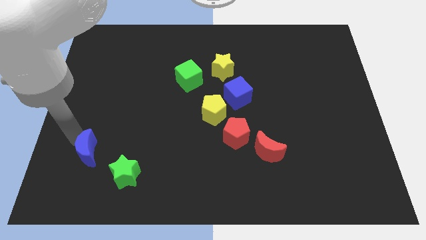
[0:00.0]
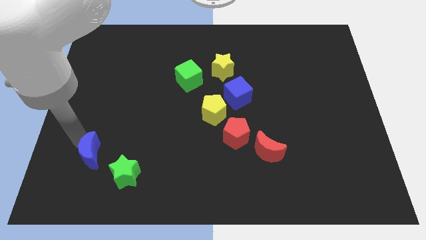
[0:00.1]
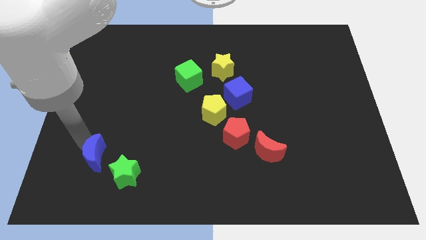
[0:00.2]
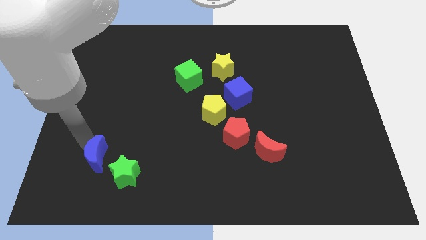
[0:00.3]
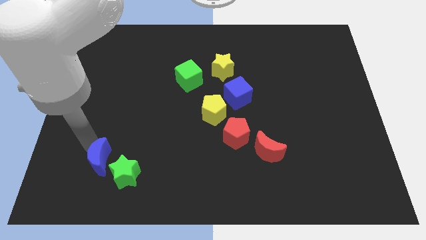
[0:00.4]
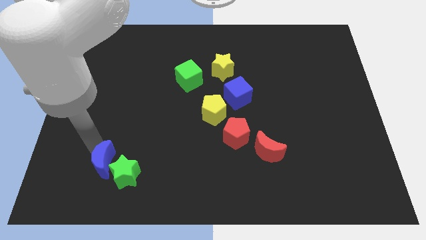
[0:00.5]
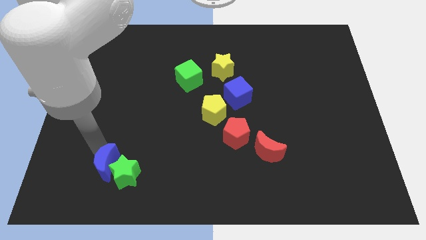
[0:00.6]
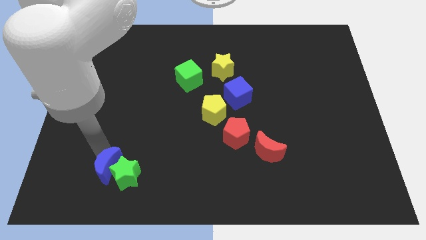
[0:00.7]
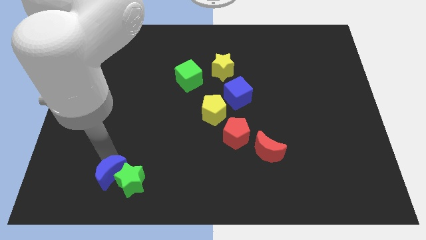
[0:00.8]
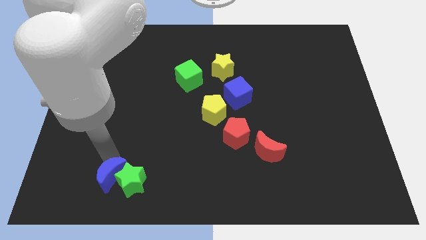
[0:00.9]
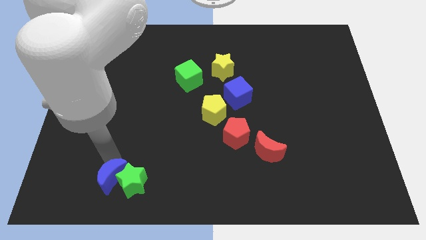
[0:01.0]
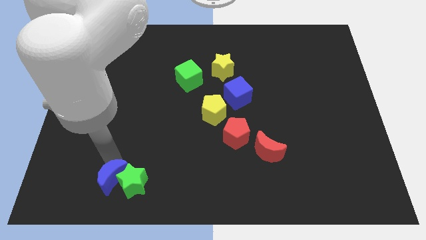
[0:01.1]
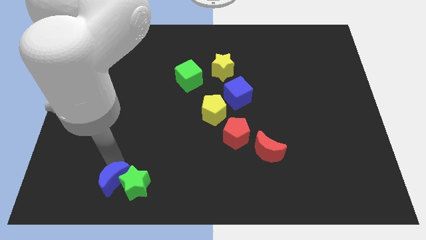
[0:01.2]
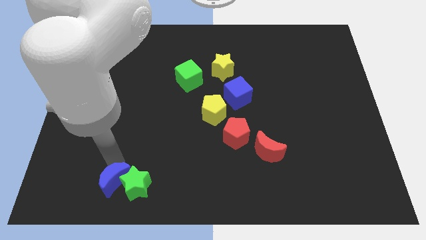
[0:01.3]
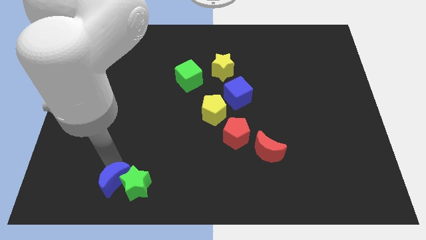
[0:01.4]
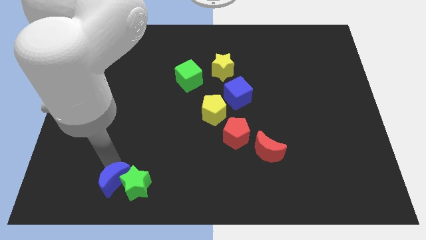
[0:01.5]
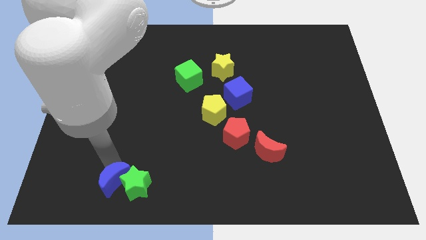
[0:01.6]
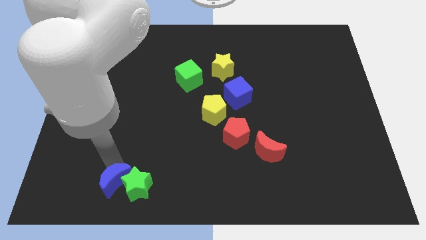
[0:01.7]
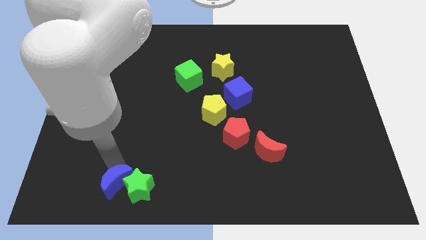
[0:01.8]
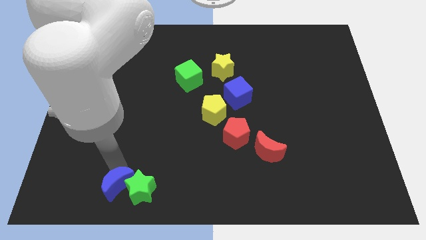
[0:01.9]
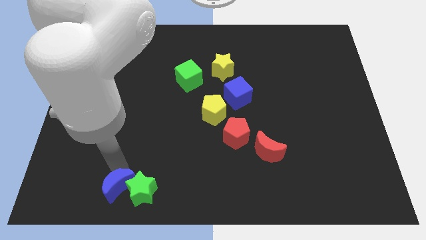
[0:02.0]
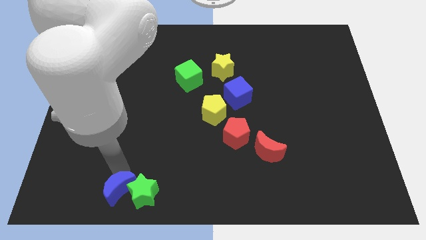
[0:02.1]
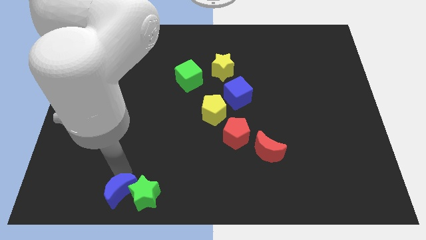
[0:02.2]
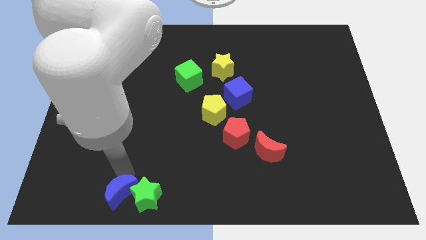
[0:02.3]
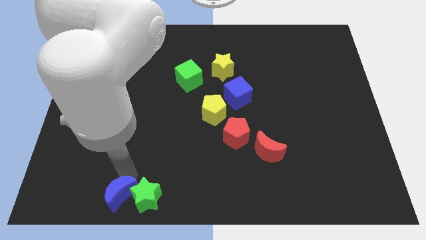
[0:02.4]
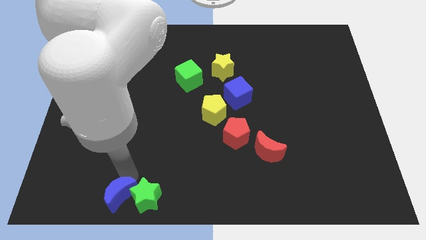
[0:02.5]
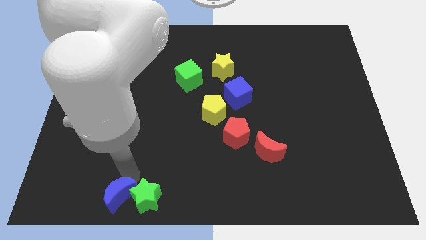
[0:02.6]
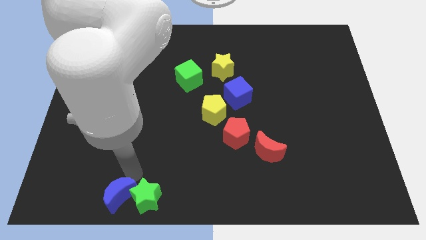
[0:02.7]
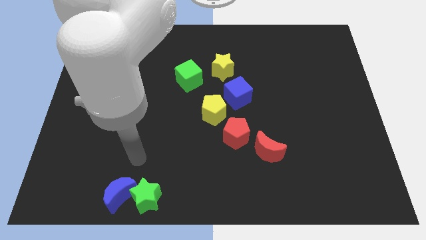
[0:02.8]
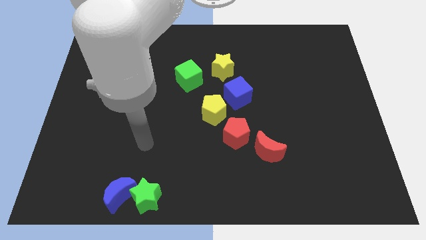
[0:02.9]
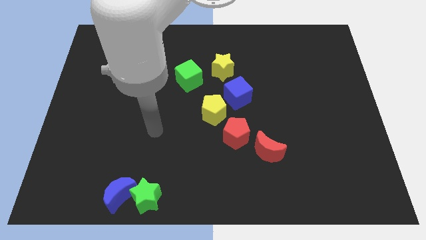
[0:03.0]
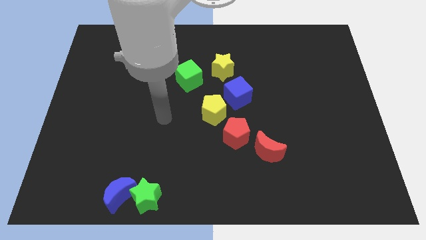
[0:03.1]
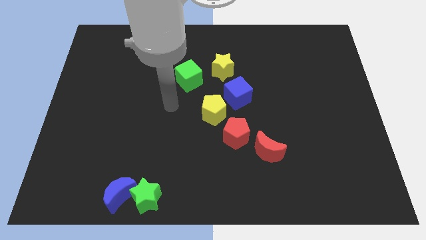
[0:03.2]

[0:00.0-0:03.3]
move blue moon along with green star towards the bottom center

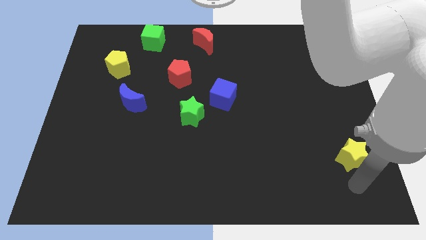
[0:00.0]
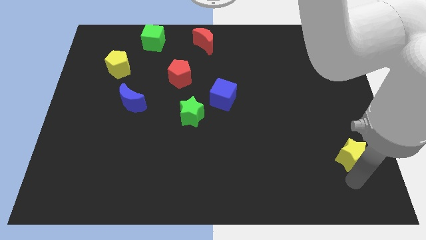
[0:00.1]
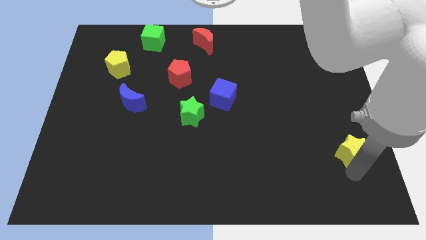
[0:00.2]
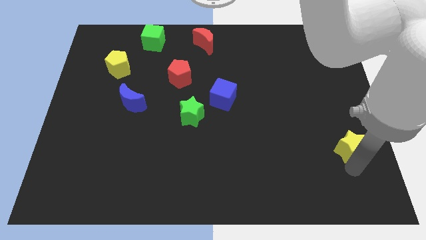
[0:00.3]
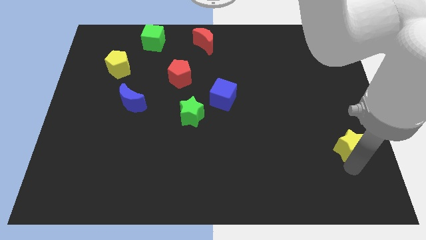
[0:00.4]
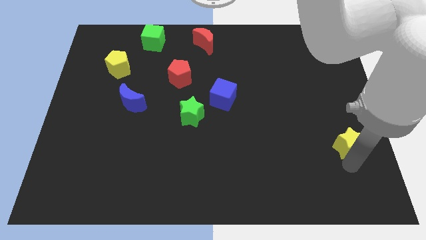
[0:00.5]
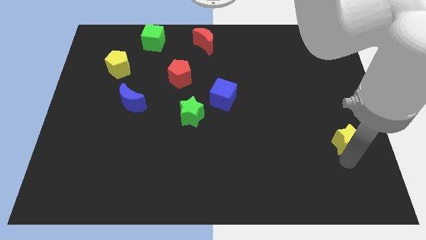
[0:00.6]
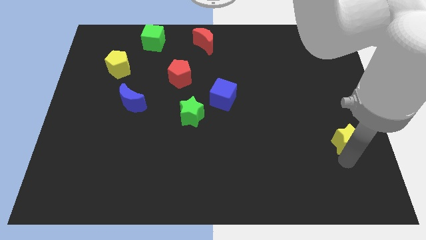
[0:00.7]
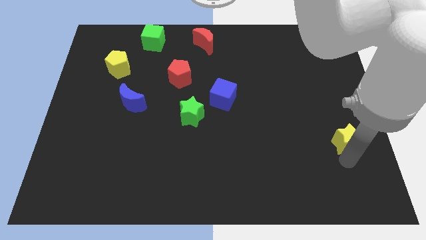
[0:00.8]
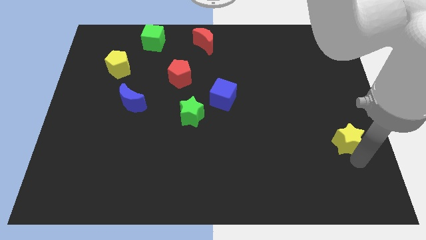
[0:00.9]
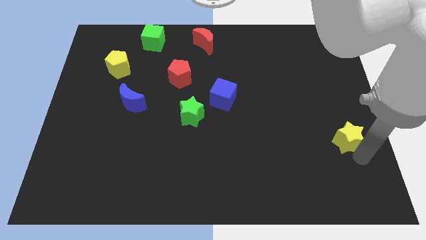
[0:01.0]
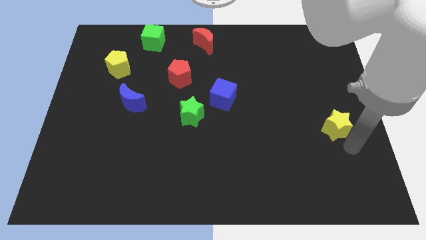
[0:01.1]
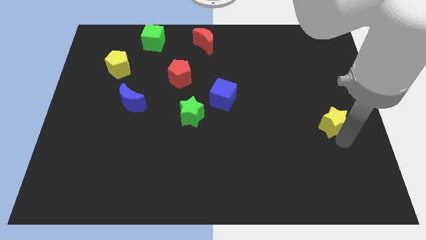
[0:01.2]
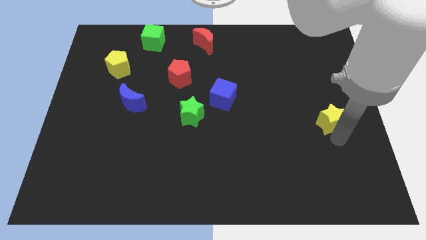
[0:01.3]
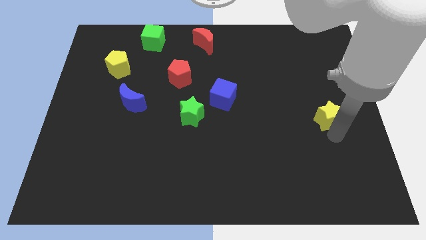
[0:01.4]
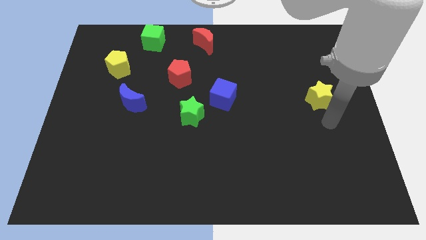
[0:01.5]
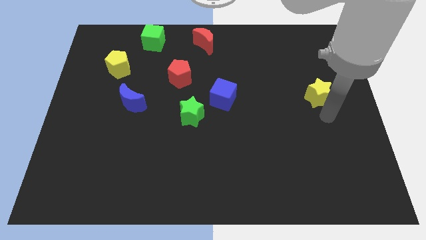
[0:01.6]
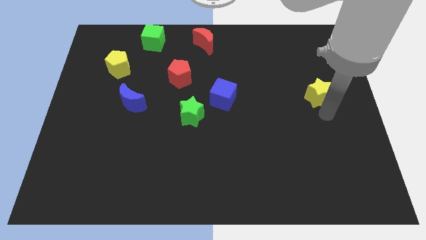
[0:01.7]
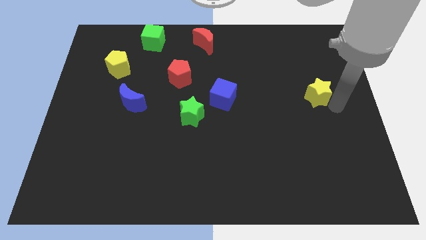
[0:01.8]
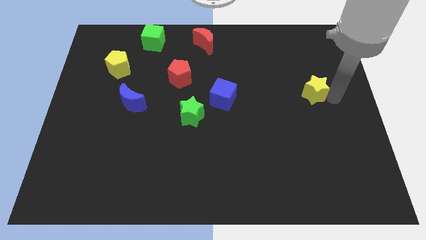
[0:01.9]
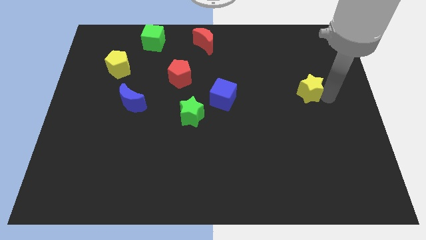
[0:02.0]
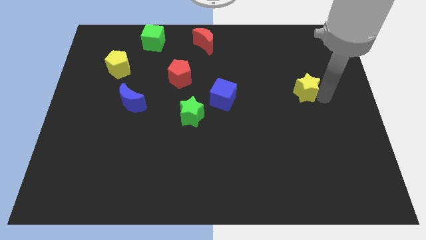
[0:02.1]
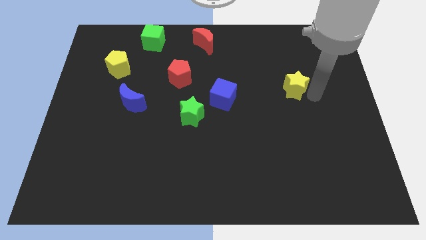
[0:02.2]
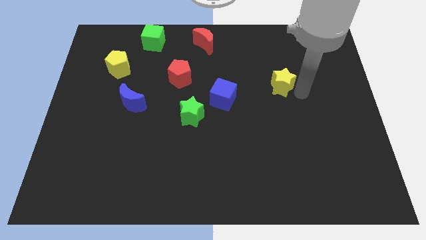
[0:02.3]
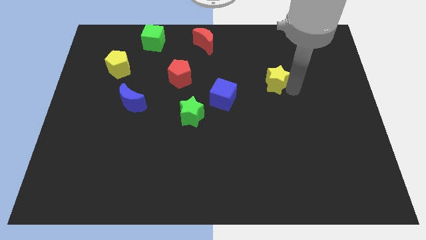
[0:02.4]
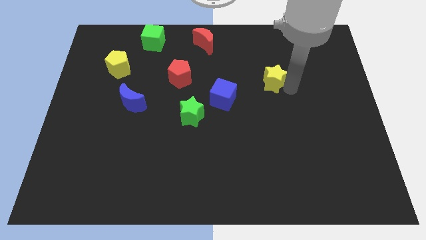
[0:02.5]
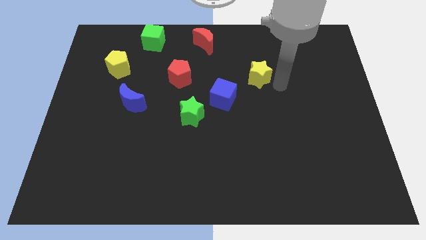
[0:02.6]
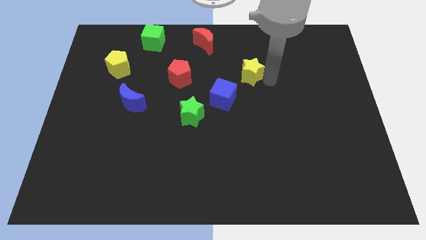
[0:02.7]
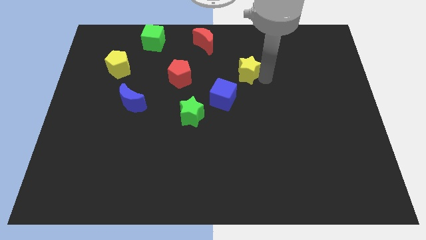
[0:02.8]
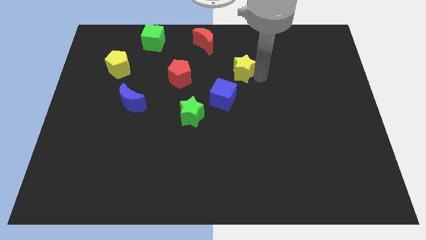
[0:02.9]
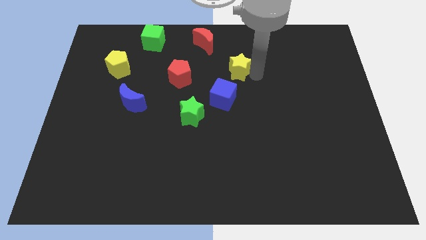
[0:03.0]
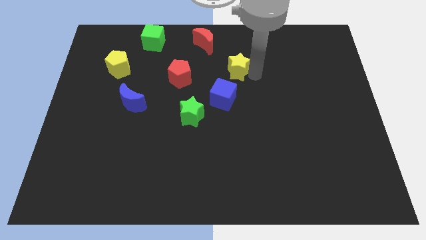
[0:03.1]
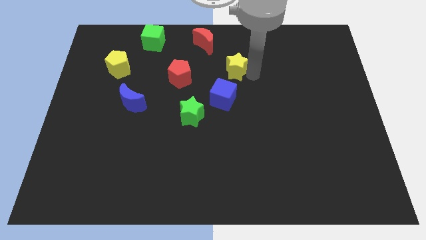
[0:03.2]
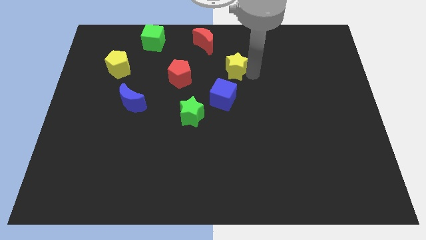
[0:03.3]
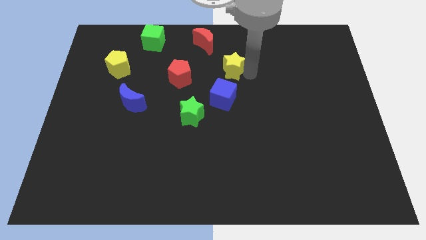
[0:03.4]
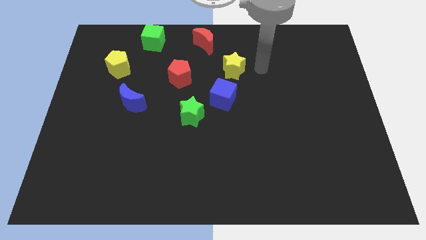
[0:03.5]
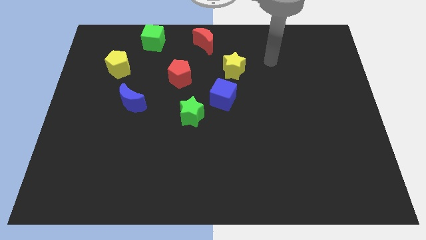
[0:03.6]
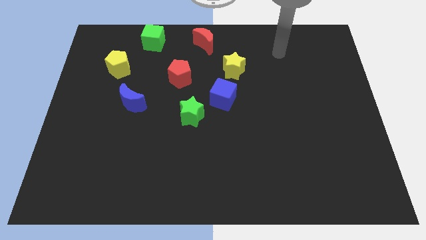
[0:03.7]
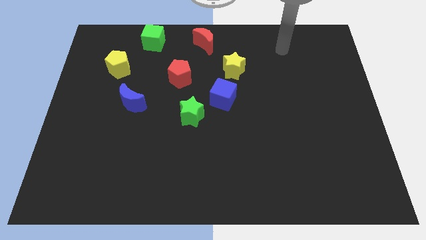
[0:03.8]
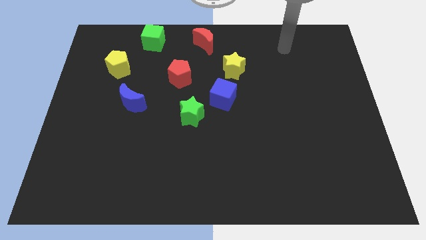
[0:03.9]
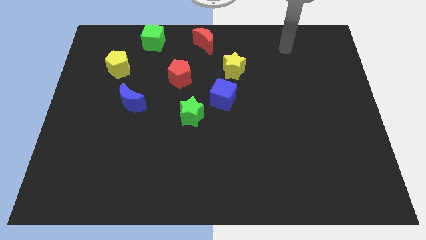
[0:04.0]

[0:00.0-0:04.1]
put the yellow star above the blue cube

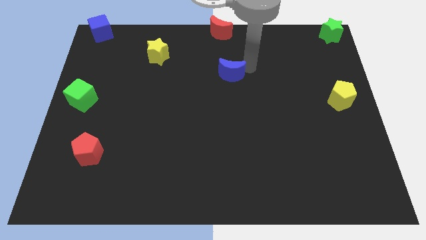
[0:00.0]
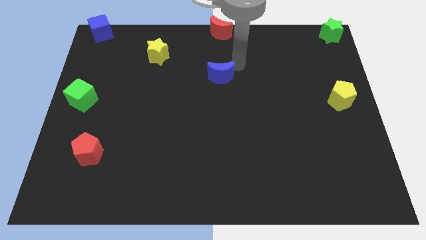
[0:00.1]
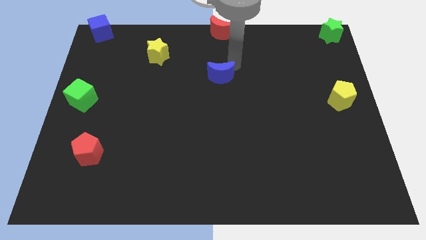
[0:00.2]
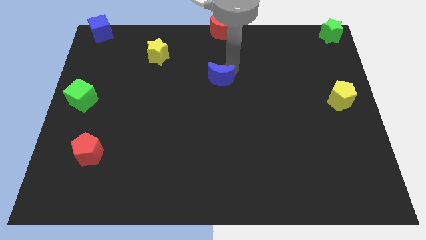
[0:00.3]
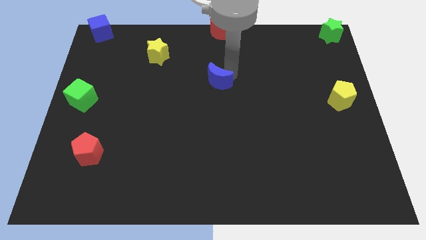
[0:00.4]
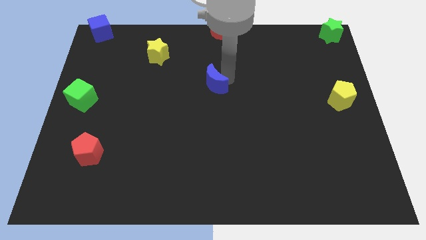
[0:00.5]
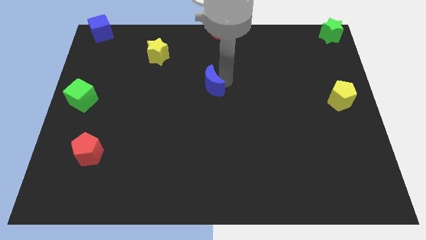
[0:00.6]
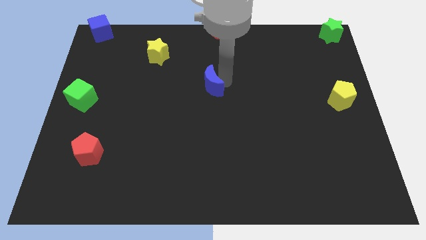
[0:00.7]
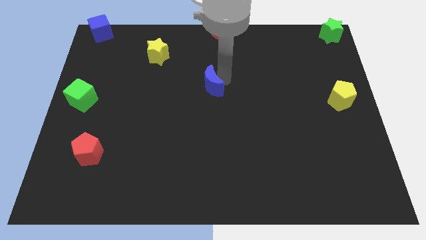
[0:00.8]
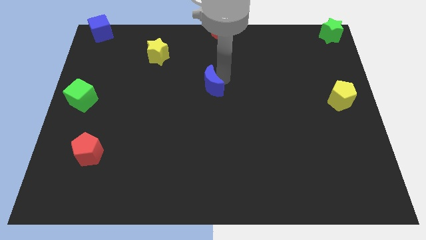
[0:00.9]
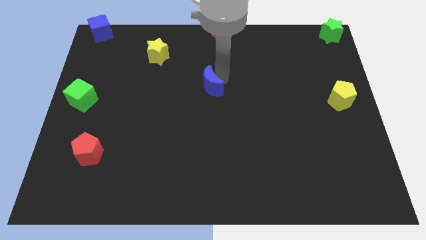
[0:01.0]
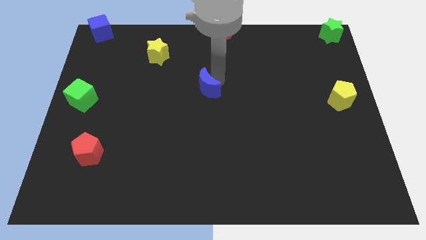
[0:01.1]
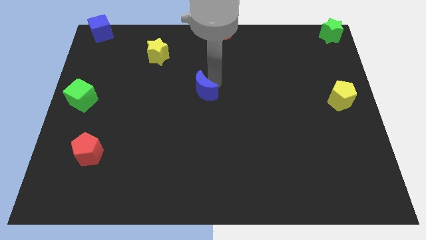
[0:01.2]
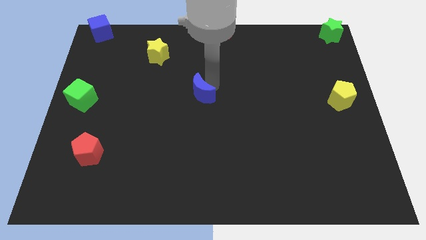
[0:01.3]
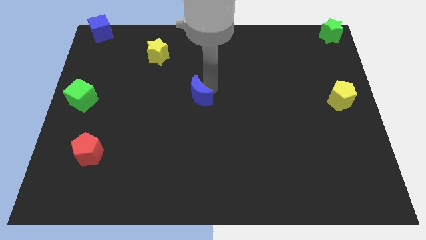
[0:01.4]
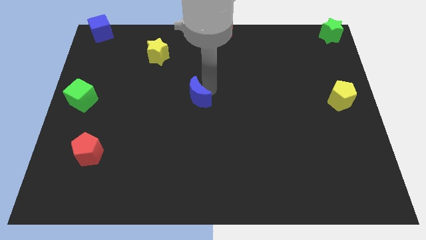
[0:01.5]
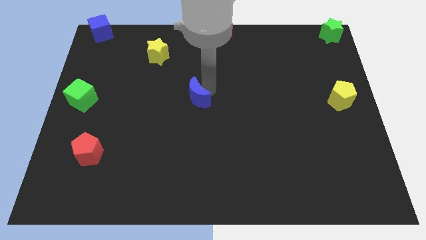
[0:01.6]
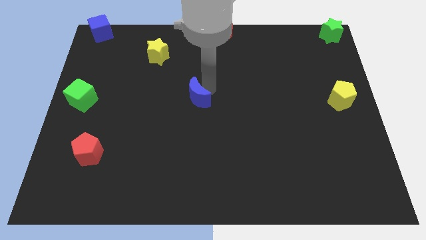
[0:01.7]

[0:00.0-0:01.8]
slide the blue crescent to the center of the board
